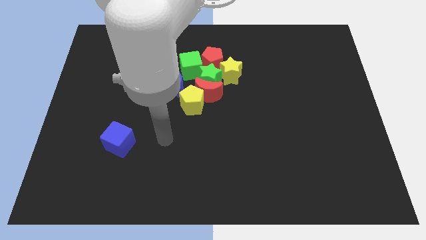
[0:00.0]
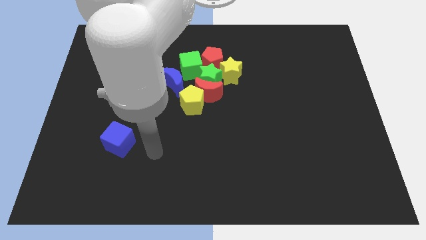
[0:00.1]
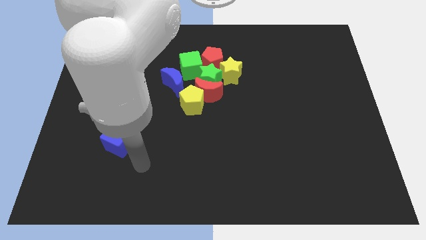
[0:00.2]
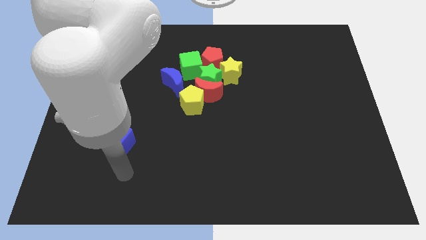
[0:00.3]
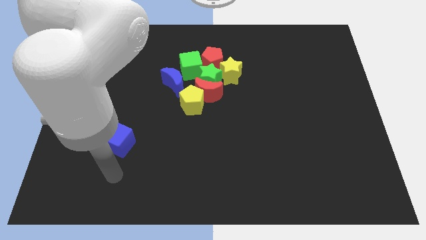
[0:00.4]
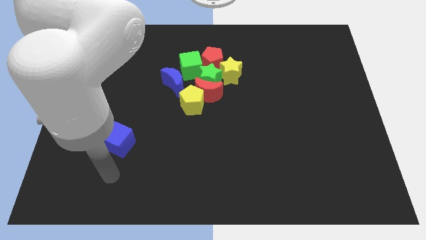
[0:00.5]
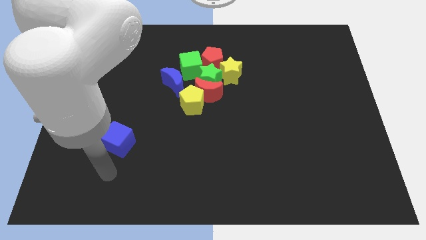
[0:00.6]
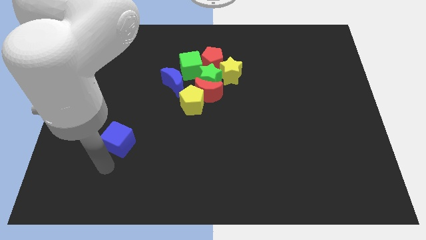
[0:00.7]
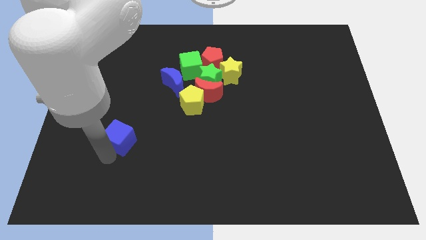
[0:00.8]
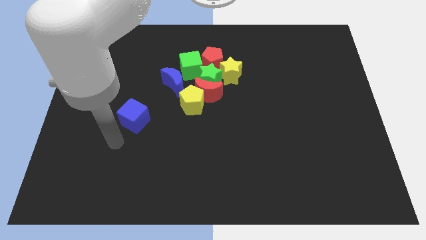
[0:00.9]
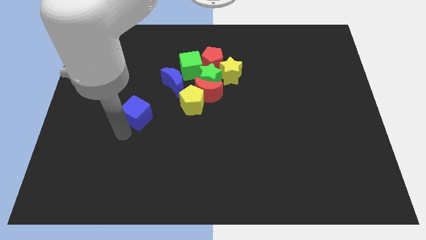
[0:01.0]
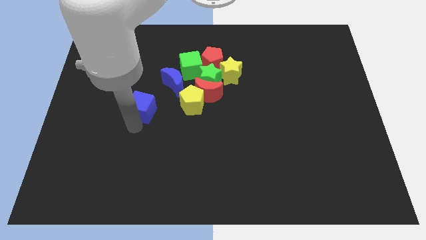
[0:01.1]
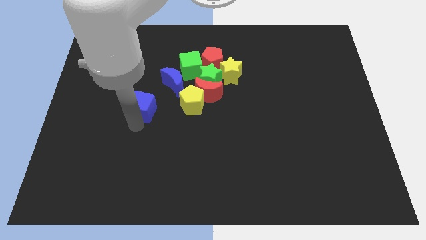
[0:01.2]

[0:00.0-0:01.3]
push the blue cube close to the blue crescent

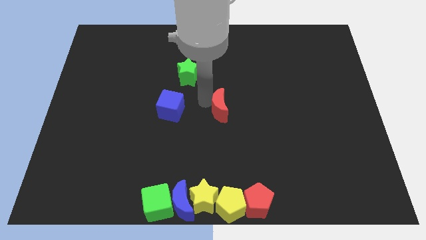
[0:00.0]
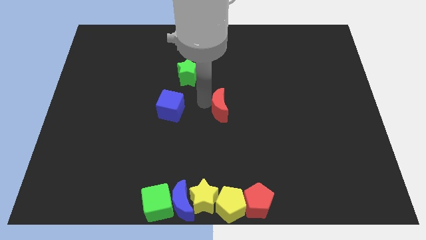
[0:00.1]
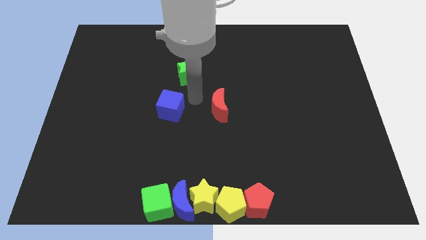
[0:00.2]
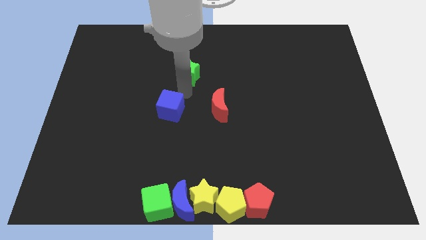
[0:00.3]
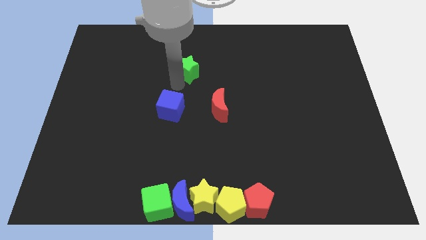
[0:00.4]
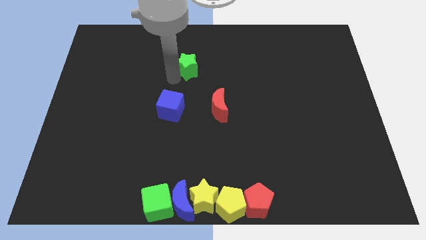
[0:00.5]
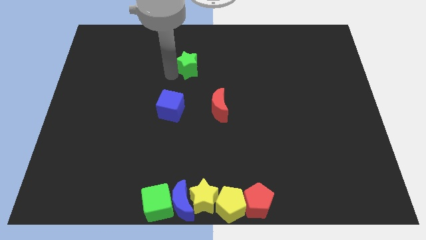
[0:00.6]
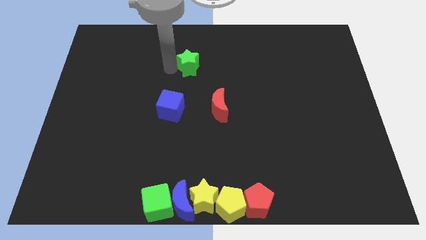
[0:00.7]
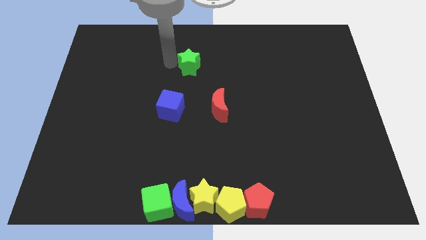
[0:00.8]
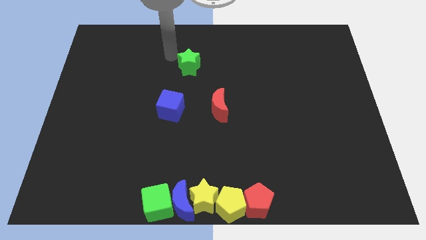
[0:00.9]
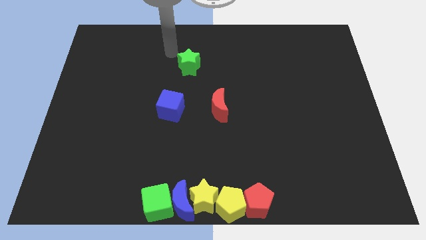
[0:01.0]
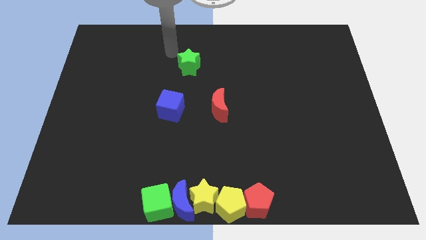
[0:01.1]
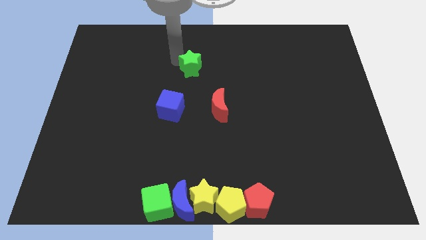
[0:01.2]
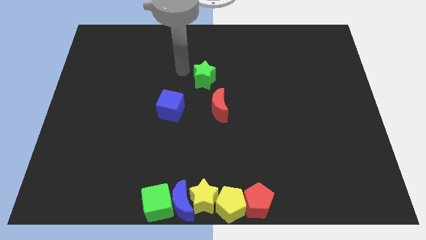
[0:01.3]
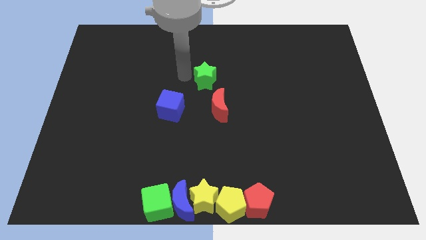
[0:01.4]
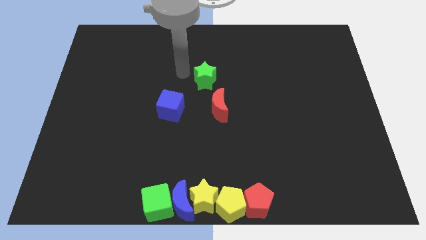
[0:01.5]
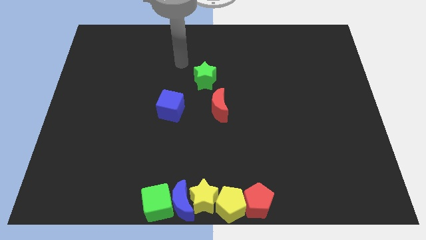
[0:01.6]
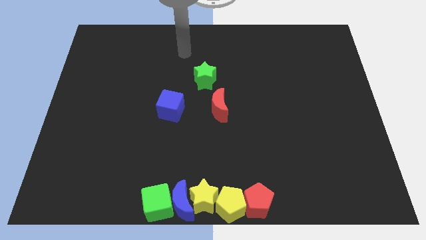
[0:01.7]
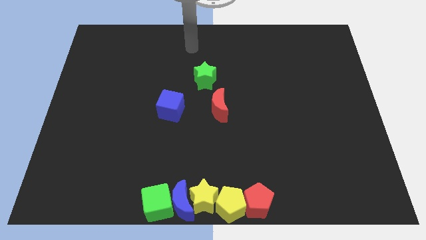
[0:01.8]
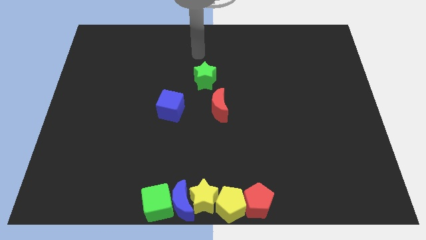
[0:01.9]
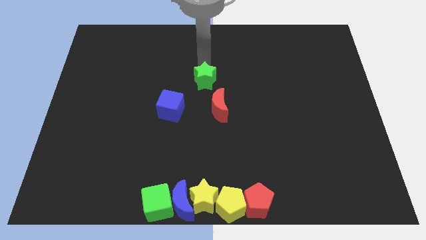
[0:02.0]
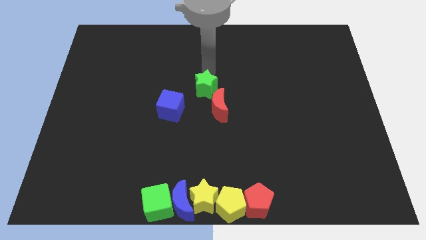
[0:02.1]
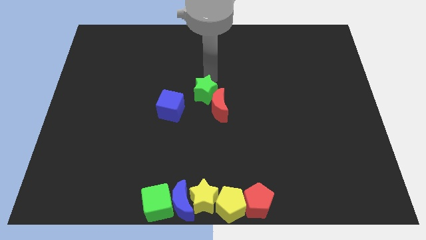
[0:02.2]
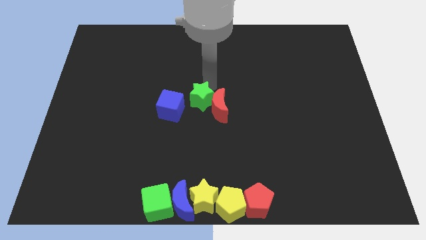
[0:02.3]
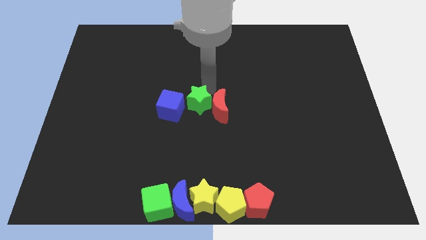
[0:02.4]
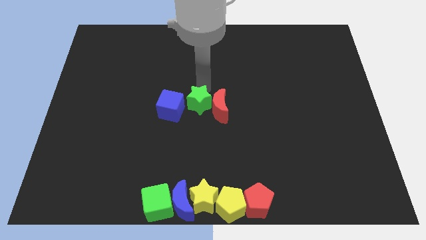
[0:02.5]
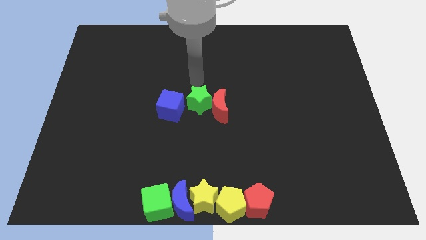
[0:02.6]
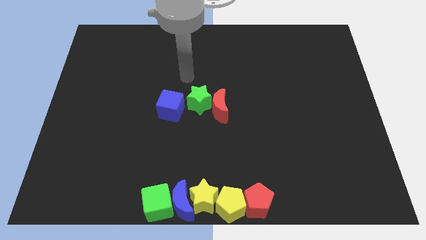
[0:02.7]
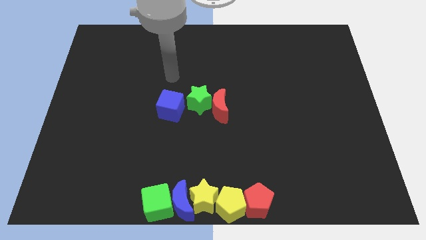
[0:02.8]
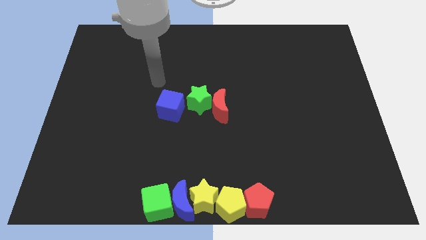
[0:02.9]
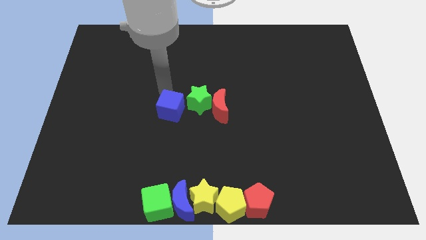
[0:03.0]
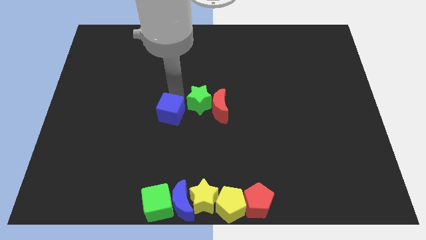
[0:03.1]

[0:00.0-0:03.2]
move the green star left to the red crescent

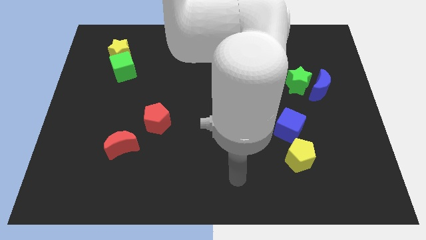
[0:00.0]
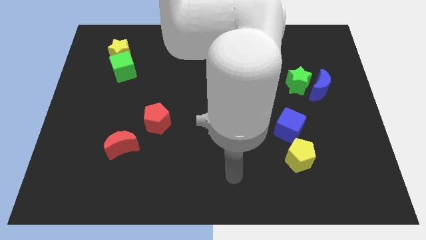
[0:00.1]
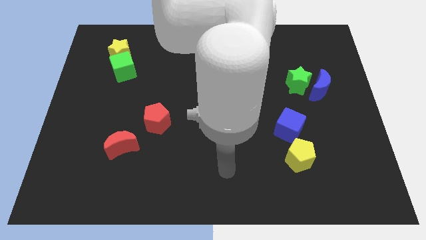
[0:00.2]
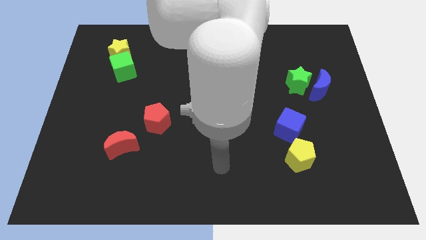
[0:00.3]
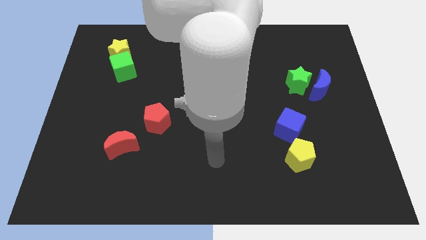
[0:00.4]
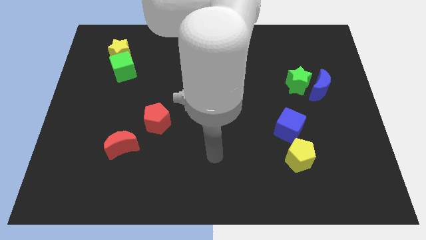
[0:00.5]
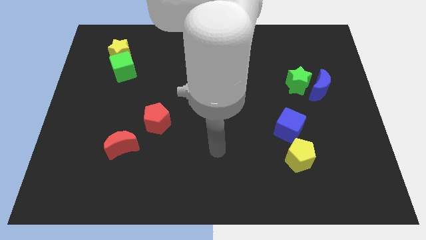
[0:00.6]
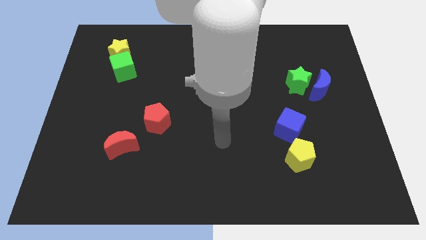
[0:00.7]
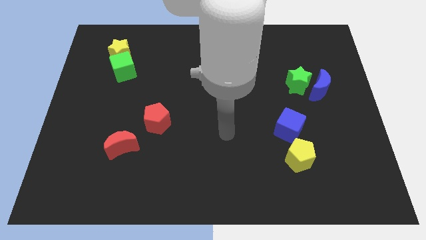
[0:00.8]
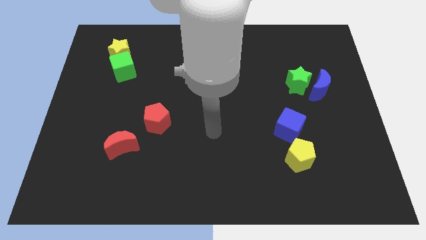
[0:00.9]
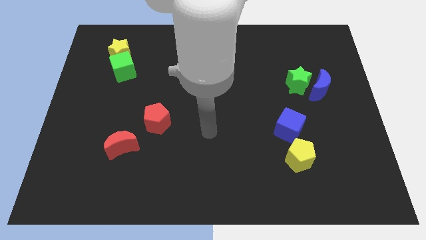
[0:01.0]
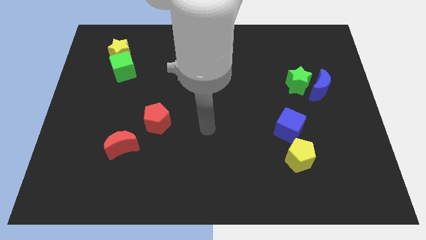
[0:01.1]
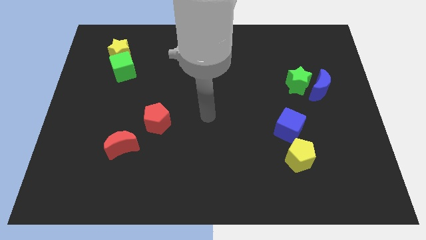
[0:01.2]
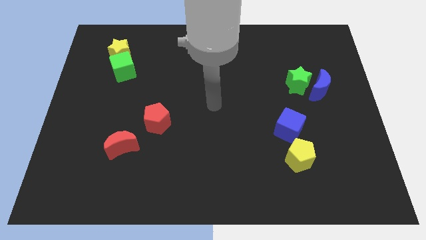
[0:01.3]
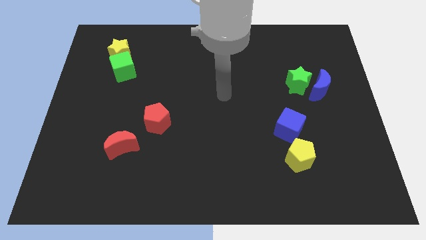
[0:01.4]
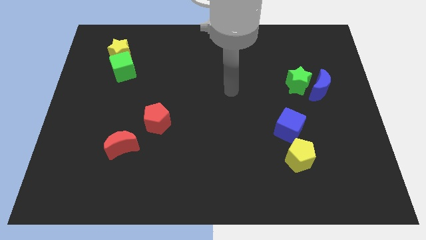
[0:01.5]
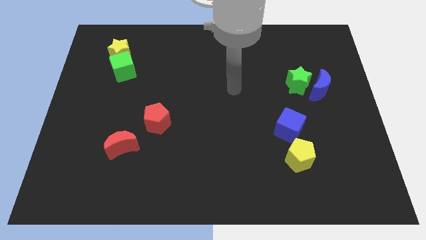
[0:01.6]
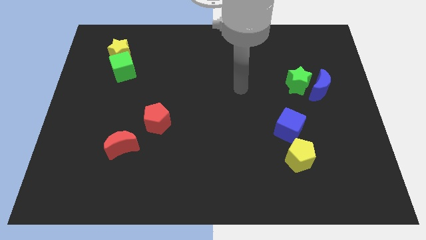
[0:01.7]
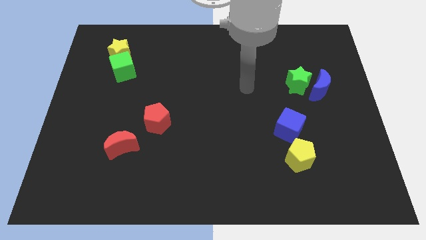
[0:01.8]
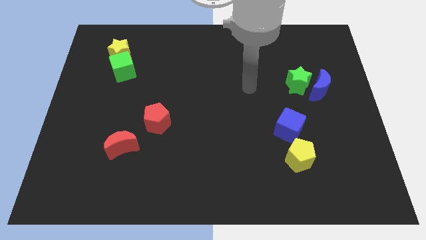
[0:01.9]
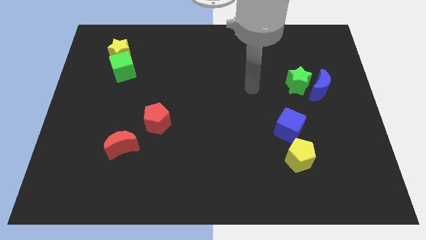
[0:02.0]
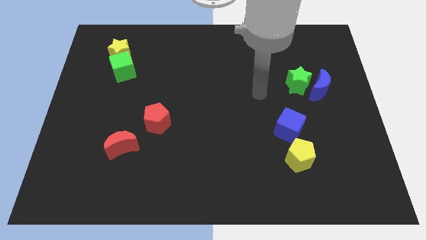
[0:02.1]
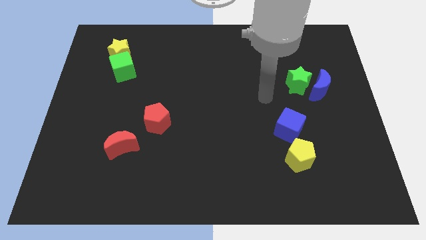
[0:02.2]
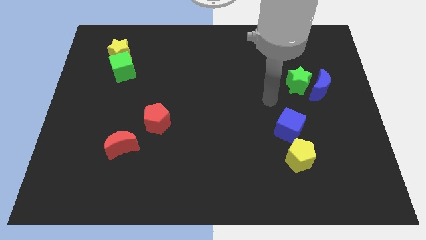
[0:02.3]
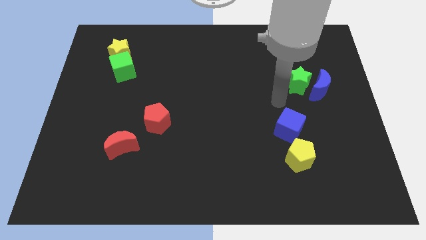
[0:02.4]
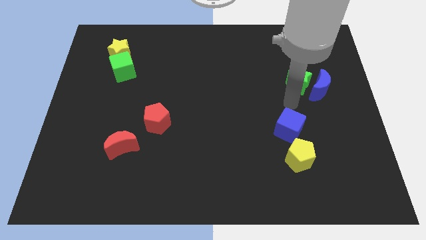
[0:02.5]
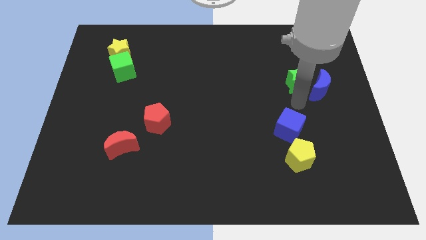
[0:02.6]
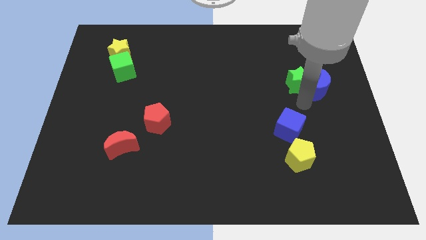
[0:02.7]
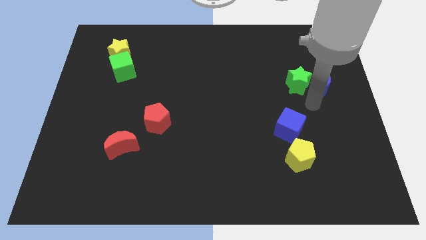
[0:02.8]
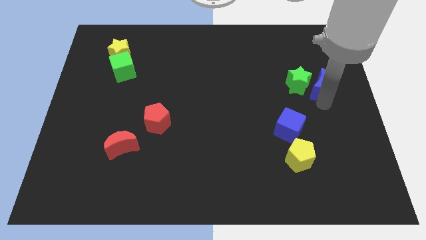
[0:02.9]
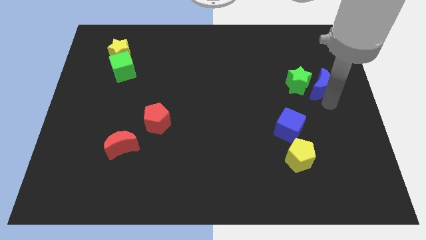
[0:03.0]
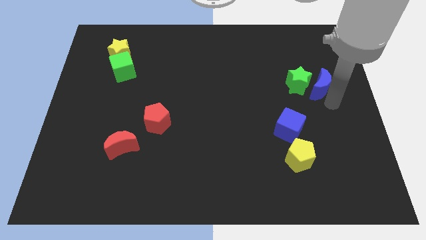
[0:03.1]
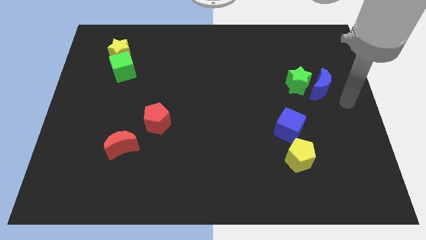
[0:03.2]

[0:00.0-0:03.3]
move arm to the right of blue moon

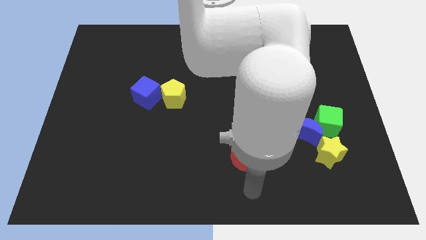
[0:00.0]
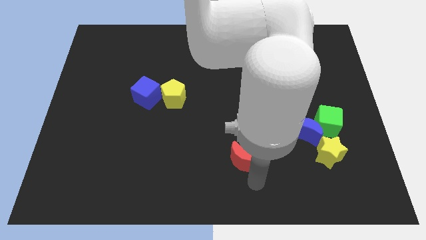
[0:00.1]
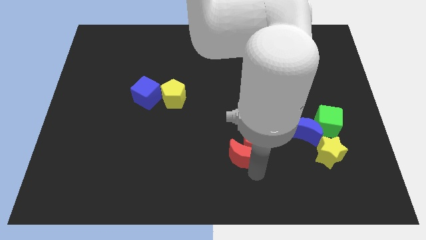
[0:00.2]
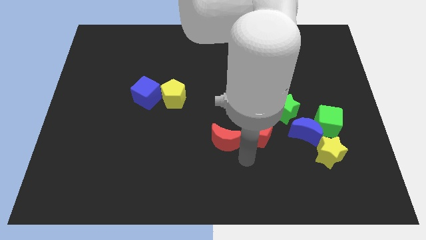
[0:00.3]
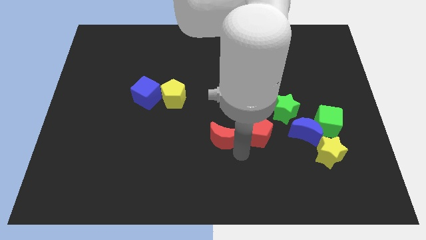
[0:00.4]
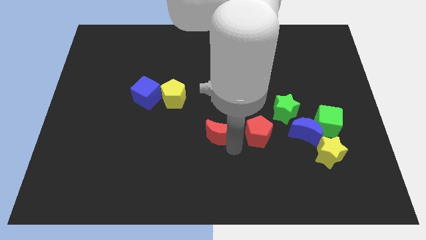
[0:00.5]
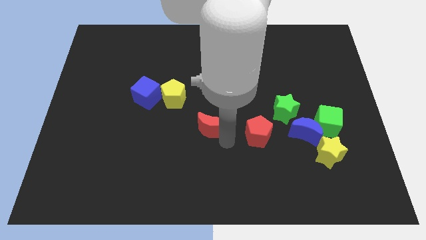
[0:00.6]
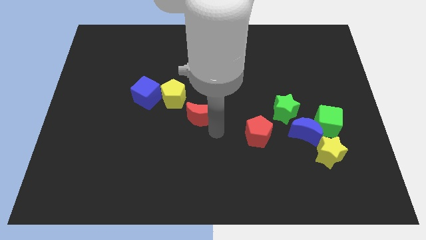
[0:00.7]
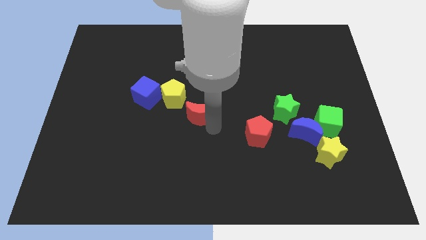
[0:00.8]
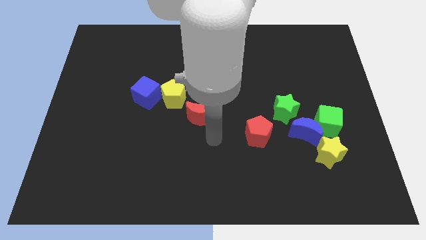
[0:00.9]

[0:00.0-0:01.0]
separate the red crescent from the red pentagon

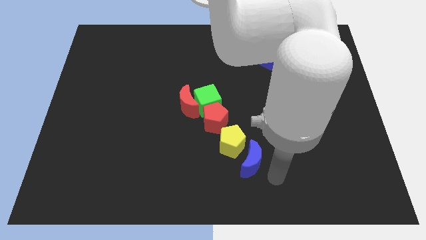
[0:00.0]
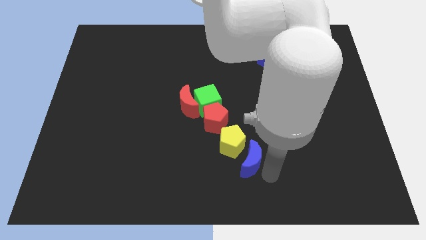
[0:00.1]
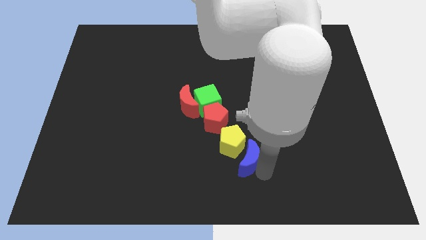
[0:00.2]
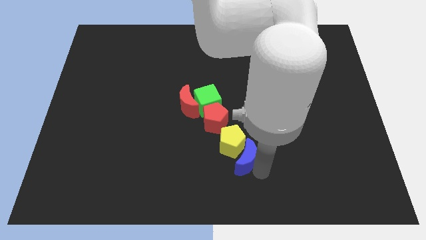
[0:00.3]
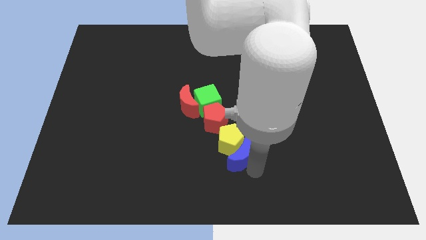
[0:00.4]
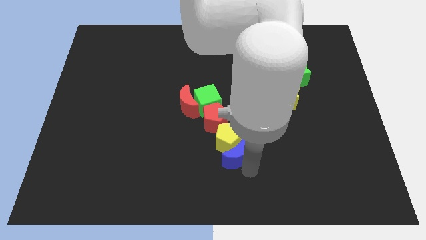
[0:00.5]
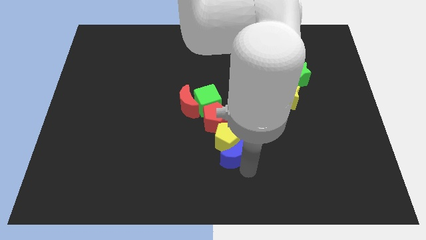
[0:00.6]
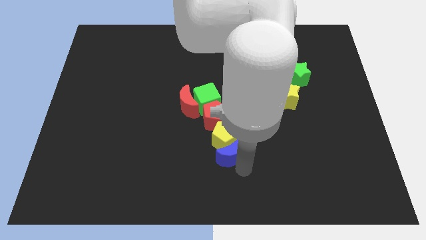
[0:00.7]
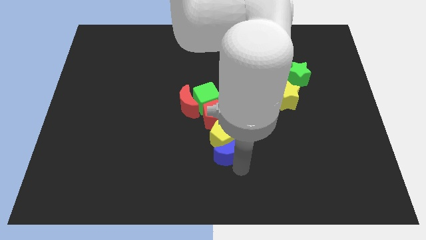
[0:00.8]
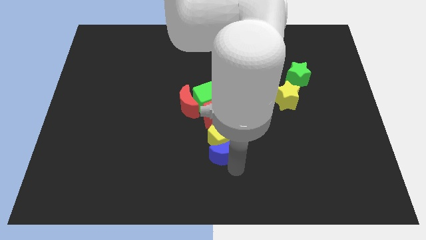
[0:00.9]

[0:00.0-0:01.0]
move blue cube slightly up
